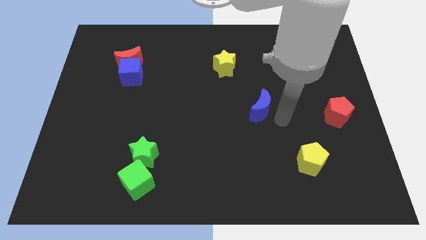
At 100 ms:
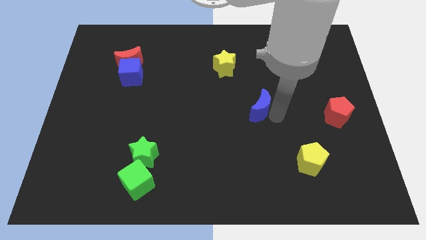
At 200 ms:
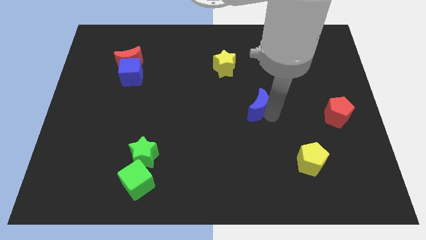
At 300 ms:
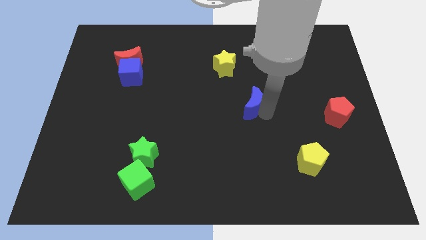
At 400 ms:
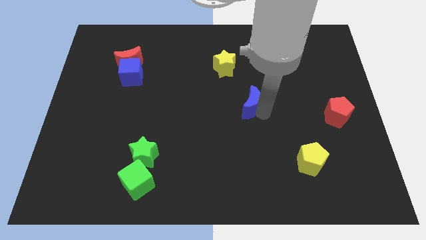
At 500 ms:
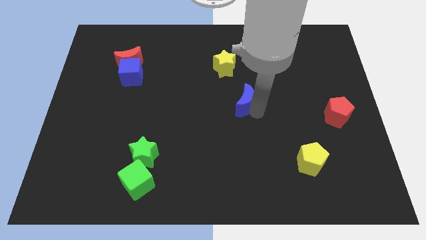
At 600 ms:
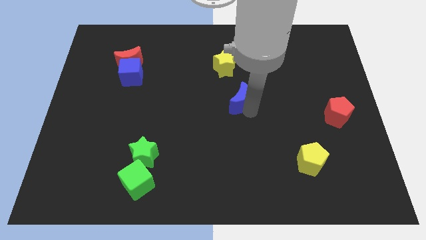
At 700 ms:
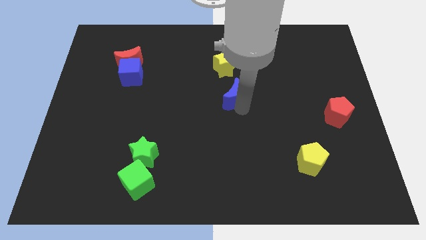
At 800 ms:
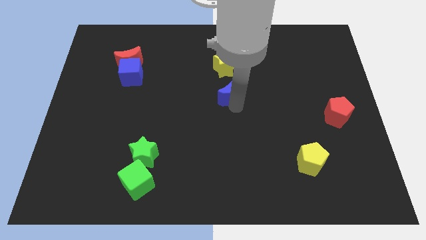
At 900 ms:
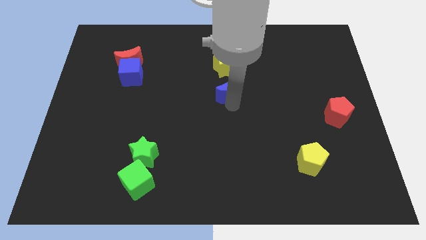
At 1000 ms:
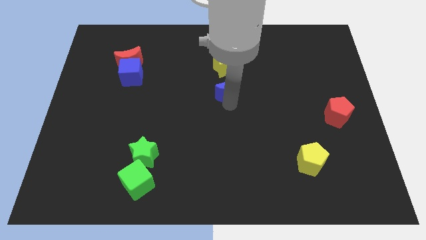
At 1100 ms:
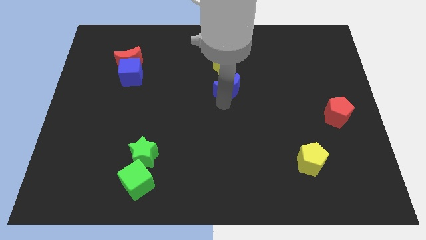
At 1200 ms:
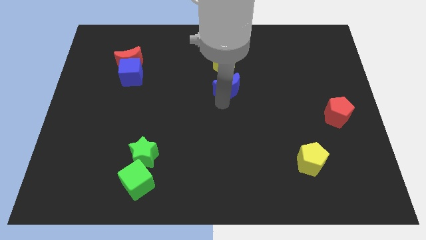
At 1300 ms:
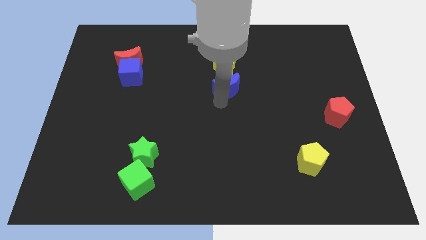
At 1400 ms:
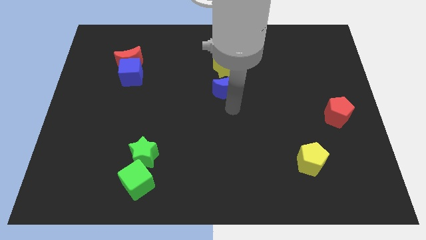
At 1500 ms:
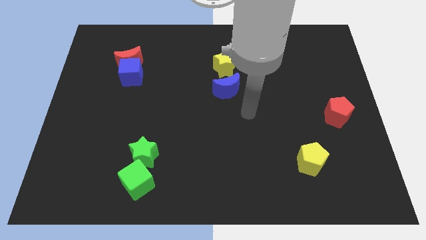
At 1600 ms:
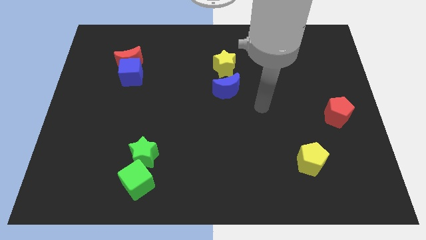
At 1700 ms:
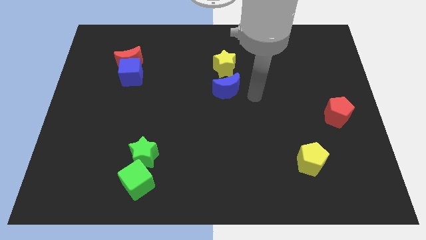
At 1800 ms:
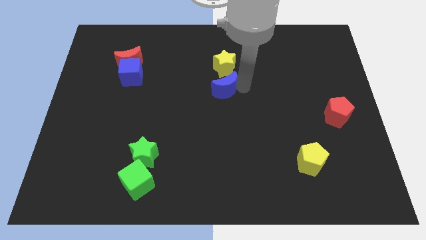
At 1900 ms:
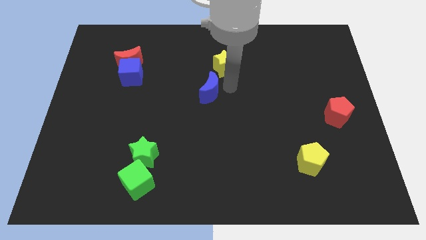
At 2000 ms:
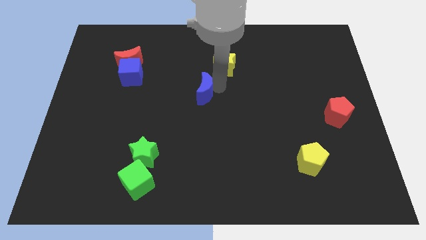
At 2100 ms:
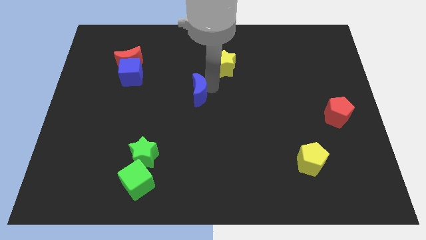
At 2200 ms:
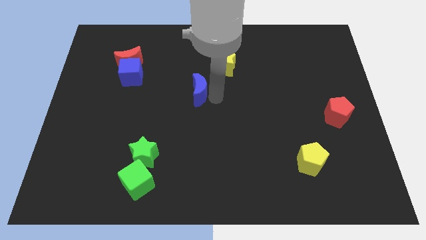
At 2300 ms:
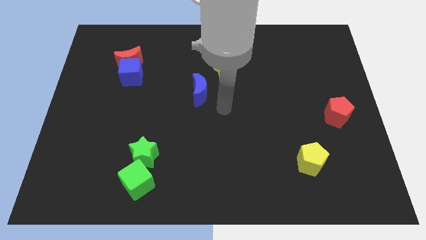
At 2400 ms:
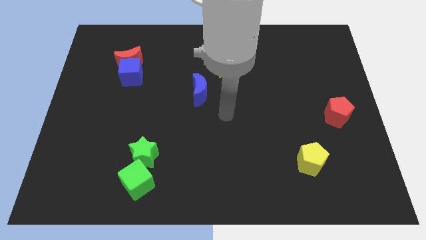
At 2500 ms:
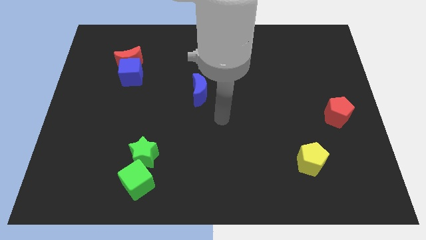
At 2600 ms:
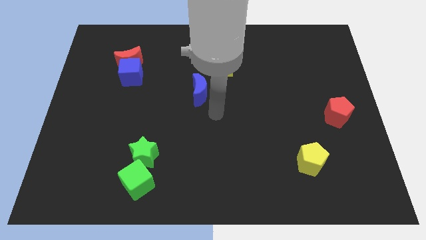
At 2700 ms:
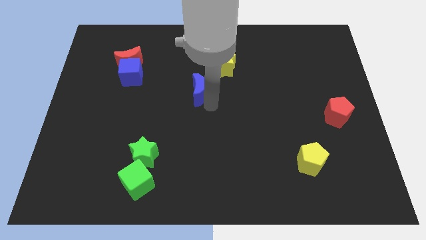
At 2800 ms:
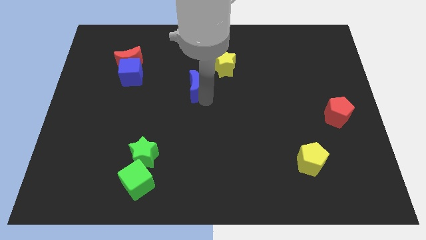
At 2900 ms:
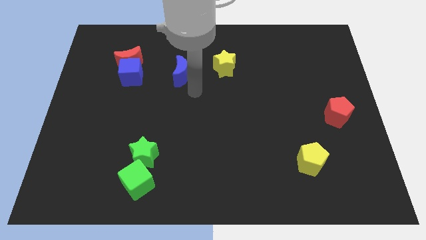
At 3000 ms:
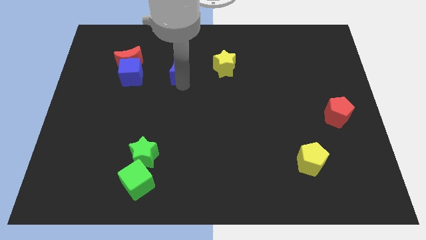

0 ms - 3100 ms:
place the blue moon above the green star

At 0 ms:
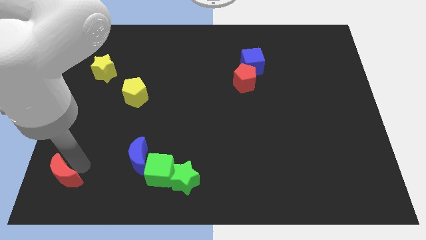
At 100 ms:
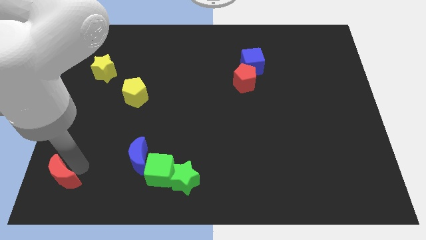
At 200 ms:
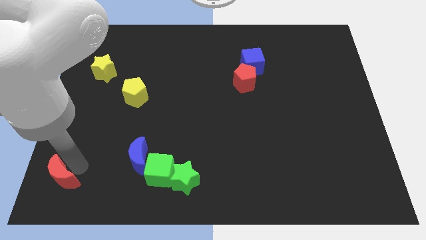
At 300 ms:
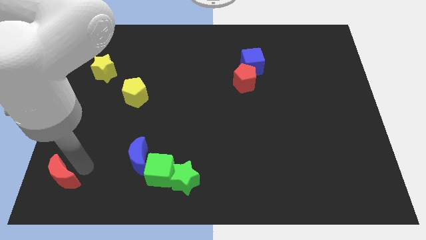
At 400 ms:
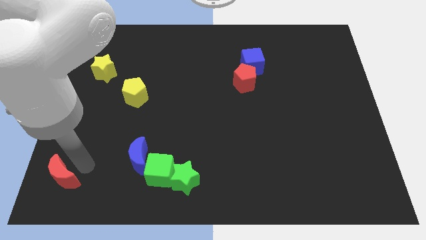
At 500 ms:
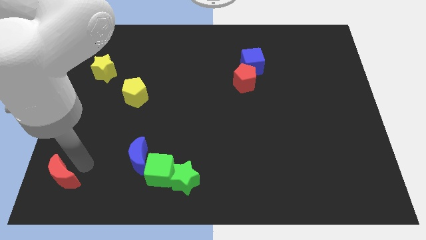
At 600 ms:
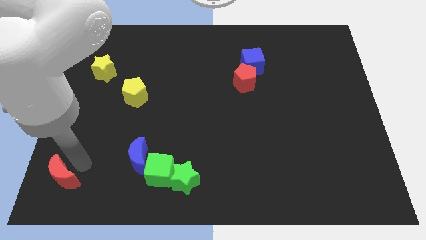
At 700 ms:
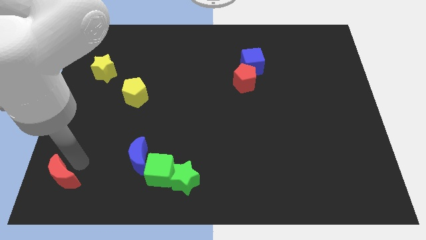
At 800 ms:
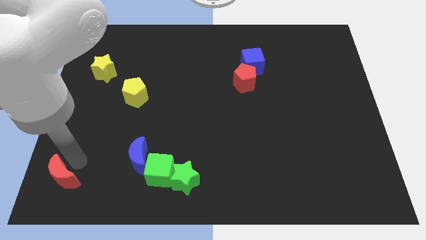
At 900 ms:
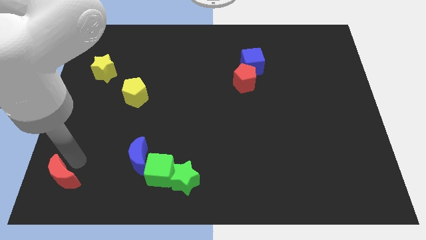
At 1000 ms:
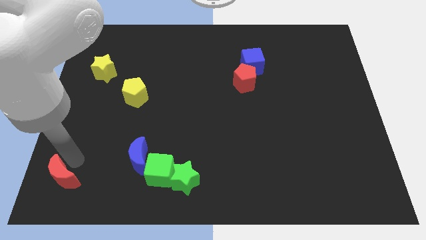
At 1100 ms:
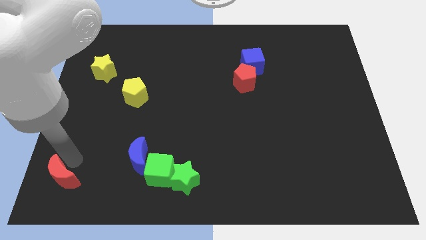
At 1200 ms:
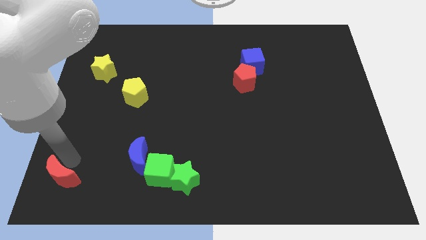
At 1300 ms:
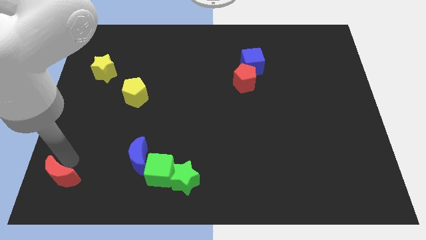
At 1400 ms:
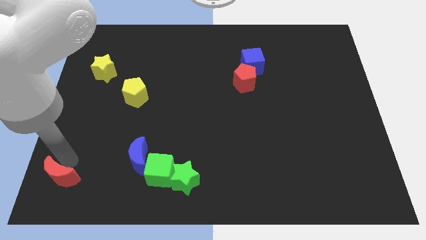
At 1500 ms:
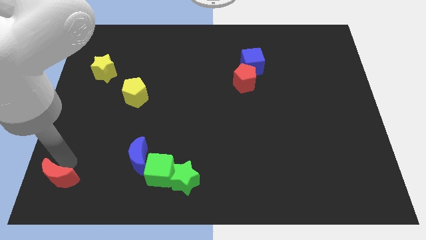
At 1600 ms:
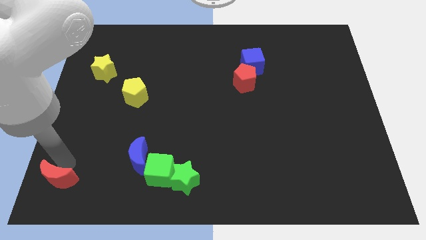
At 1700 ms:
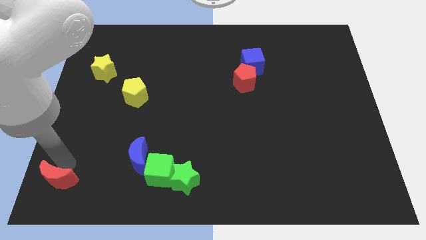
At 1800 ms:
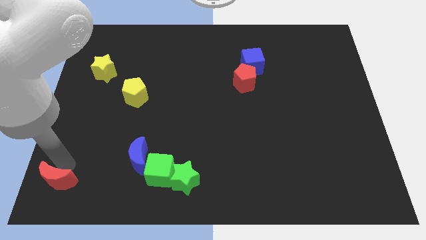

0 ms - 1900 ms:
slightly move the red moon to the left

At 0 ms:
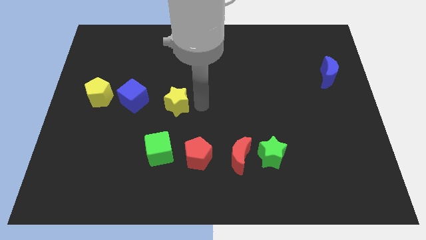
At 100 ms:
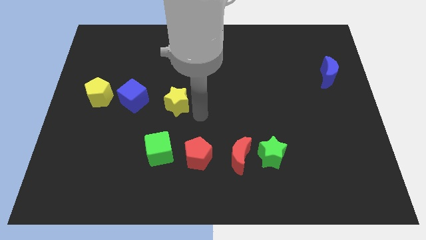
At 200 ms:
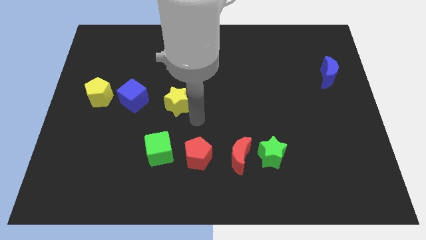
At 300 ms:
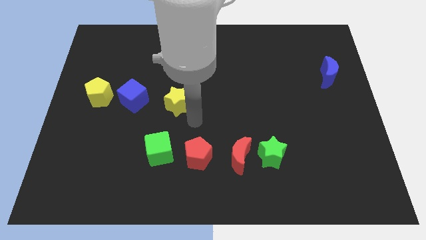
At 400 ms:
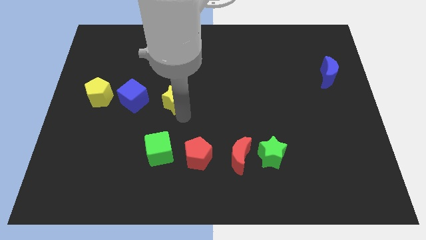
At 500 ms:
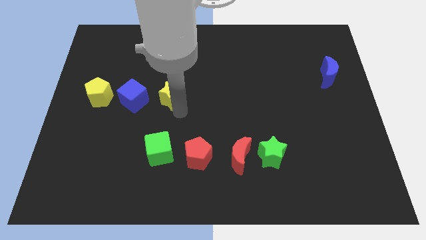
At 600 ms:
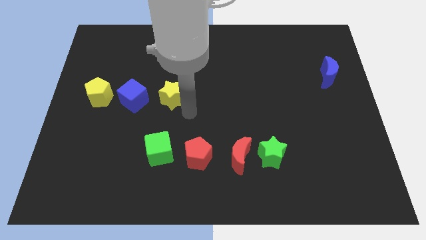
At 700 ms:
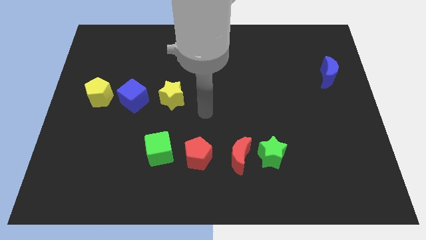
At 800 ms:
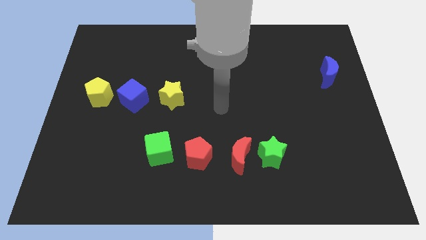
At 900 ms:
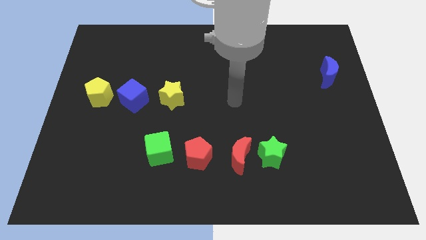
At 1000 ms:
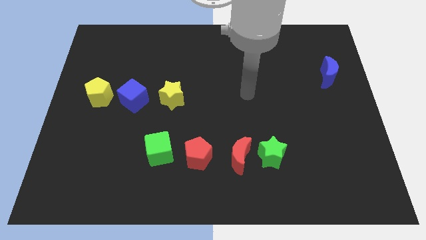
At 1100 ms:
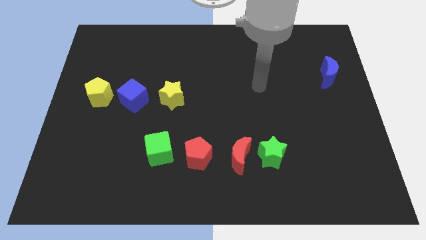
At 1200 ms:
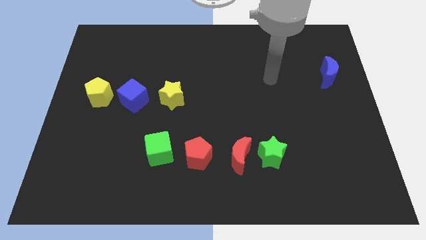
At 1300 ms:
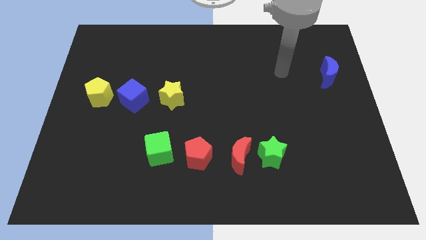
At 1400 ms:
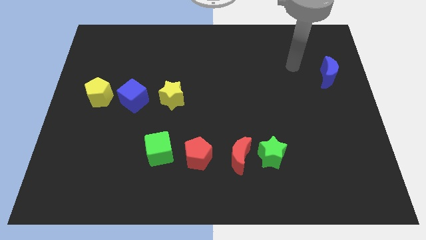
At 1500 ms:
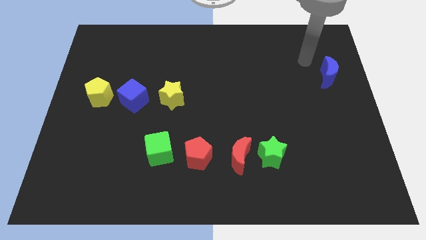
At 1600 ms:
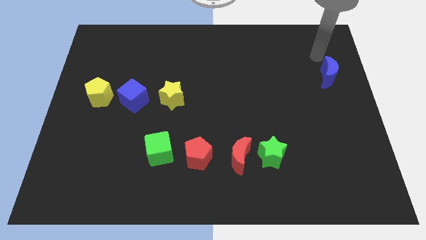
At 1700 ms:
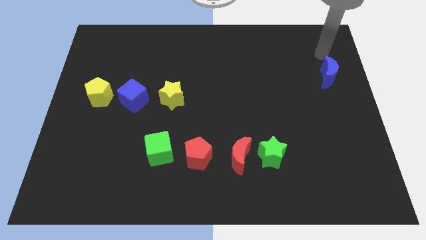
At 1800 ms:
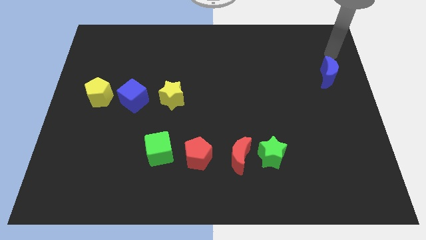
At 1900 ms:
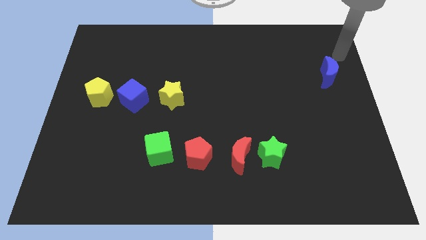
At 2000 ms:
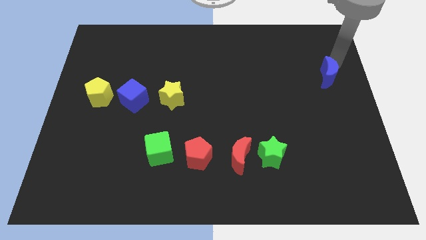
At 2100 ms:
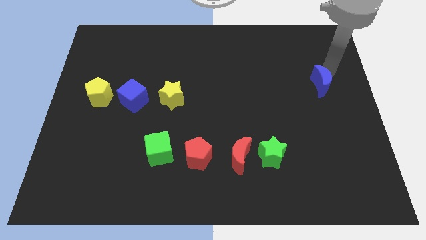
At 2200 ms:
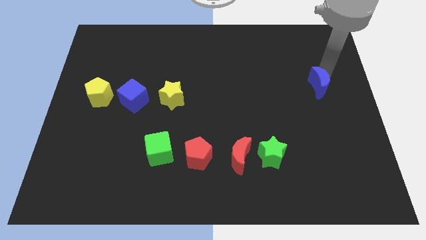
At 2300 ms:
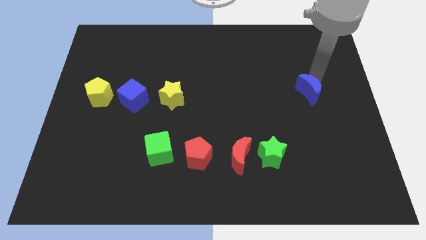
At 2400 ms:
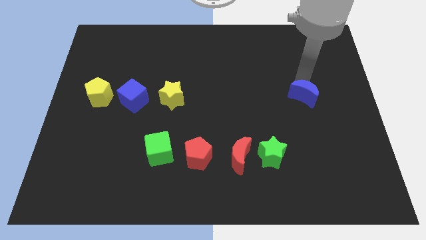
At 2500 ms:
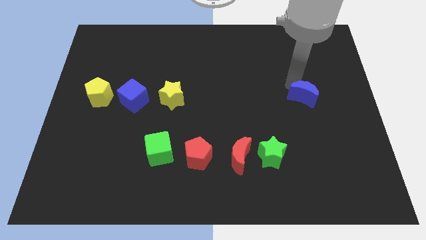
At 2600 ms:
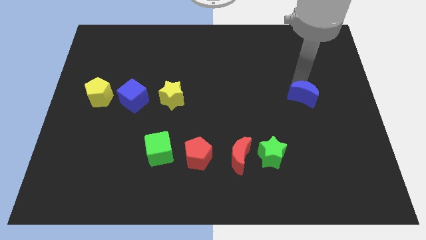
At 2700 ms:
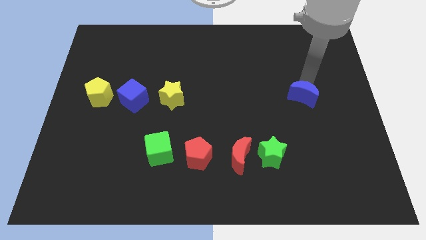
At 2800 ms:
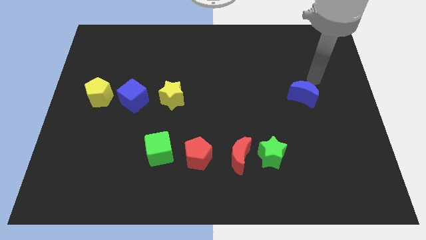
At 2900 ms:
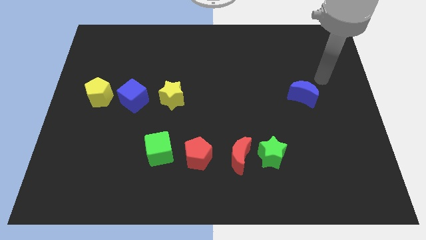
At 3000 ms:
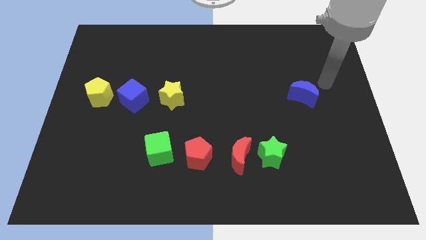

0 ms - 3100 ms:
put the blue moon horizontally to the right side of the yellow star

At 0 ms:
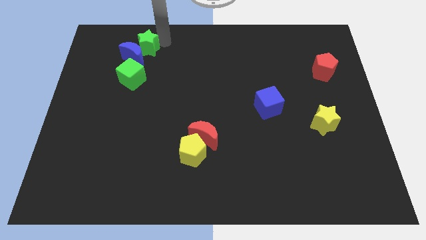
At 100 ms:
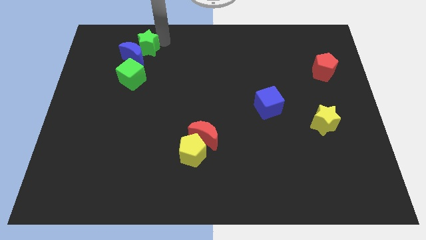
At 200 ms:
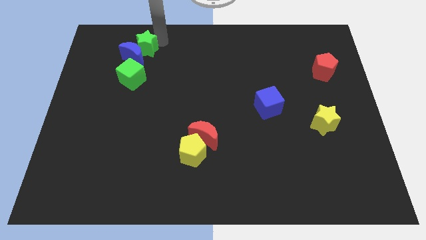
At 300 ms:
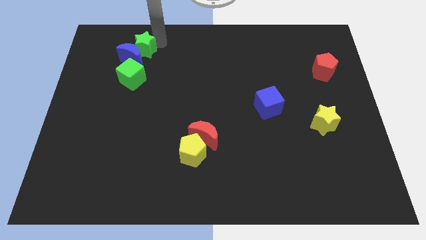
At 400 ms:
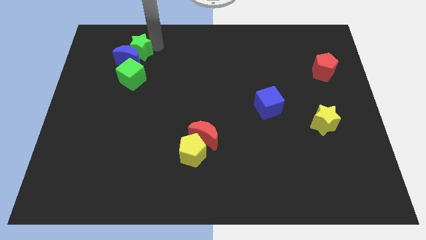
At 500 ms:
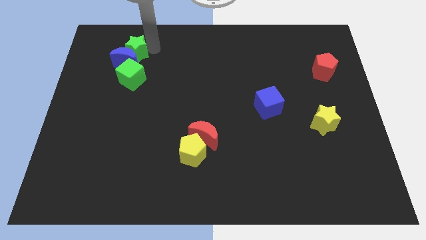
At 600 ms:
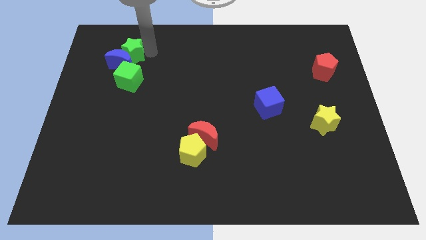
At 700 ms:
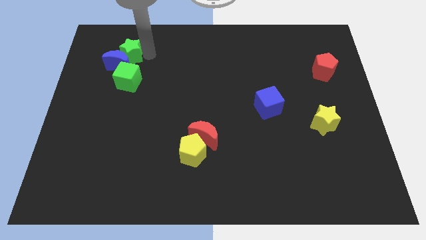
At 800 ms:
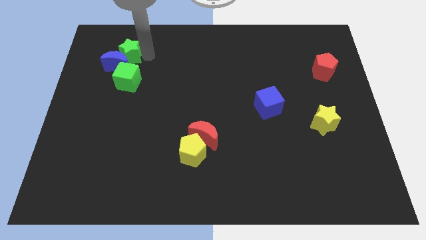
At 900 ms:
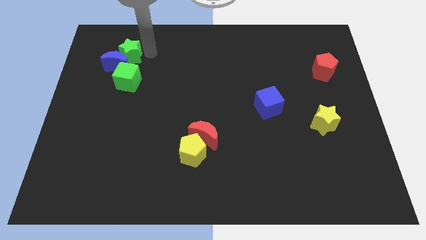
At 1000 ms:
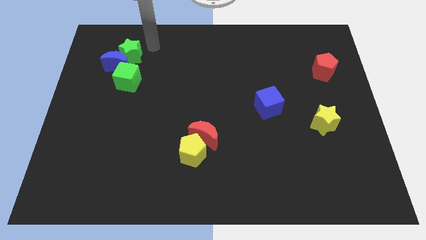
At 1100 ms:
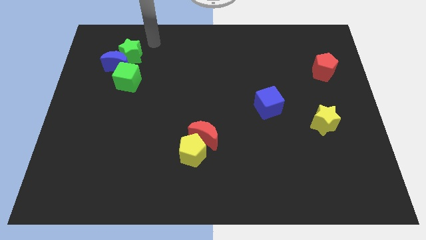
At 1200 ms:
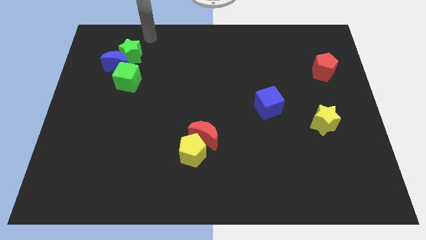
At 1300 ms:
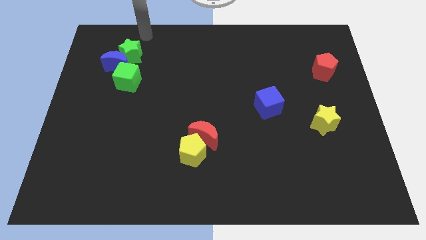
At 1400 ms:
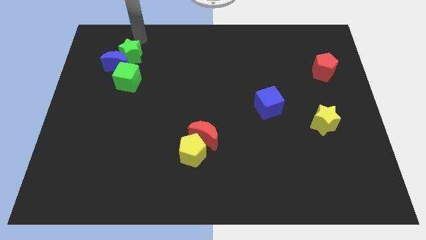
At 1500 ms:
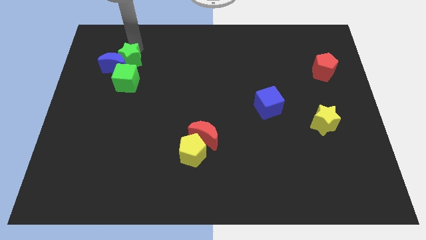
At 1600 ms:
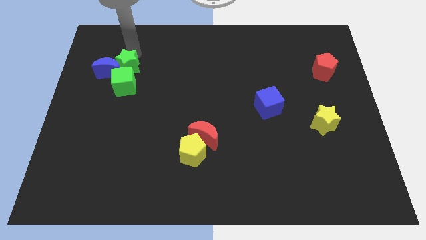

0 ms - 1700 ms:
push the green star into the blue moon
